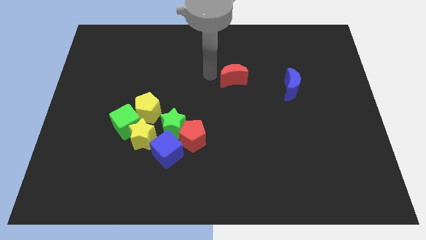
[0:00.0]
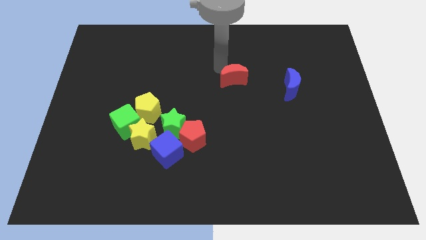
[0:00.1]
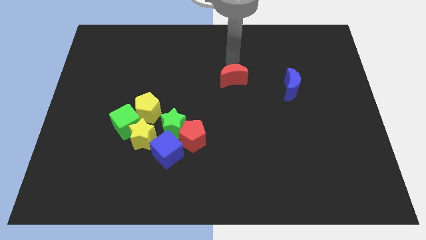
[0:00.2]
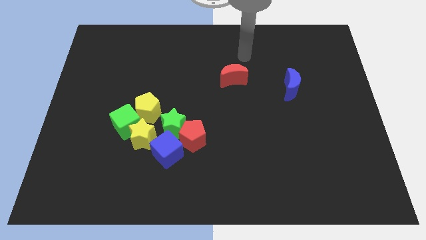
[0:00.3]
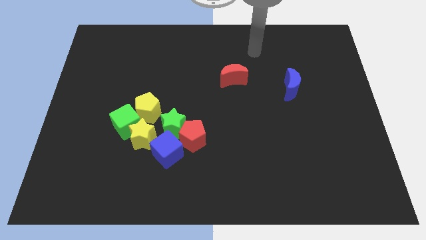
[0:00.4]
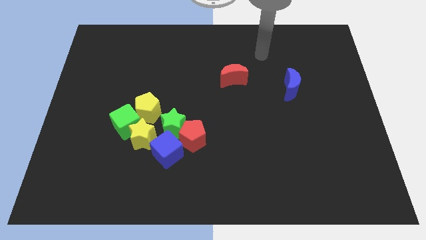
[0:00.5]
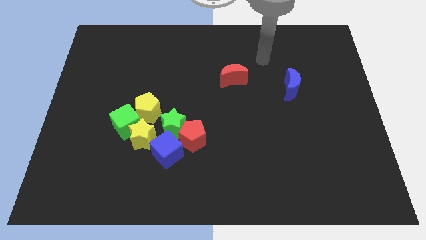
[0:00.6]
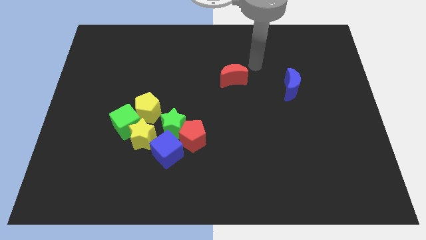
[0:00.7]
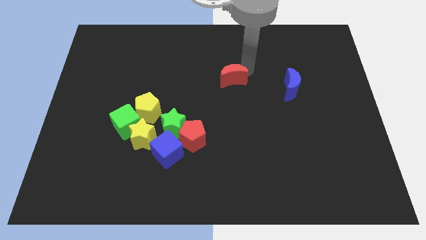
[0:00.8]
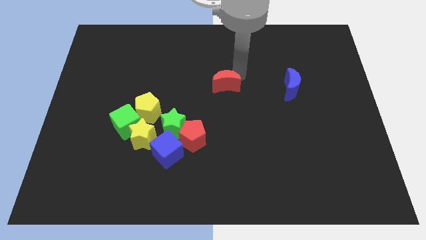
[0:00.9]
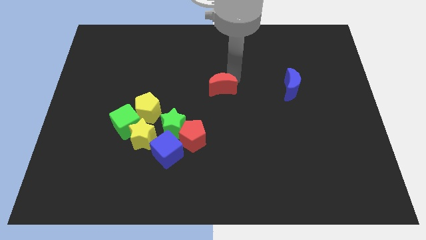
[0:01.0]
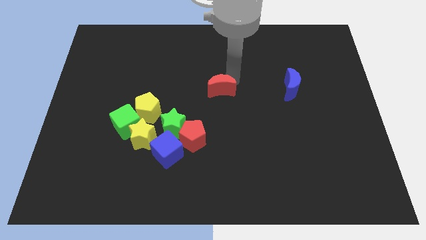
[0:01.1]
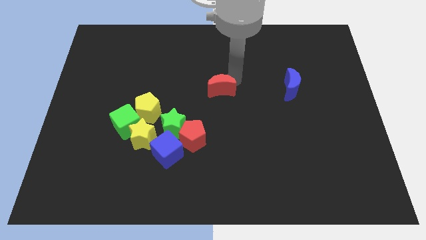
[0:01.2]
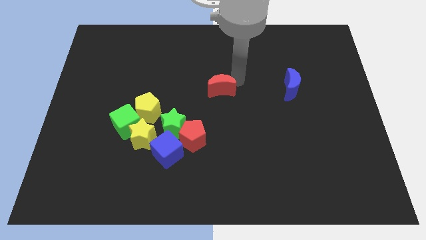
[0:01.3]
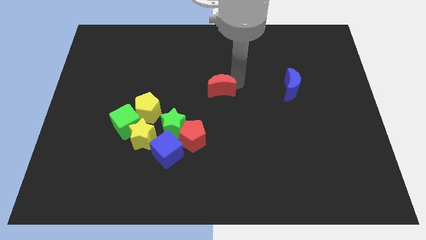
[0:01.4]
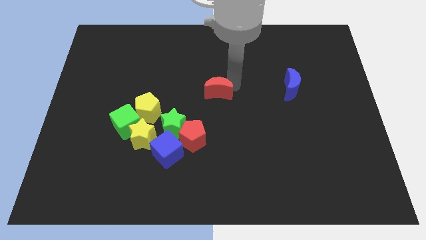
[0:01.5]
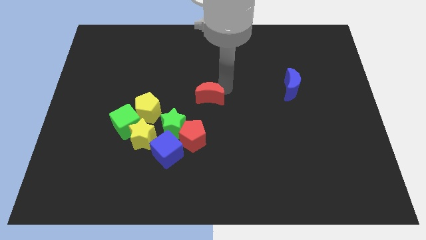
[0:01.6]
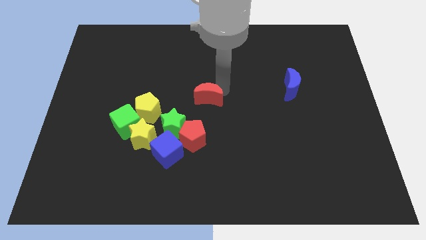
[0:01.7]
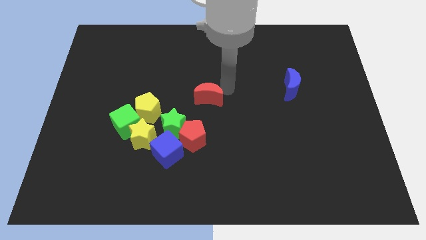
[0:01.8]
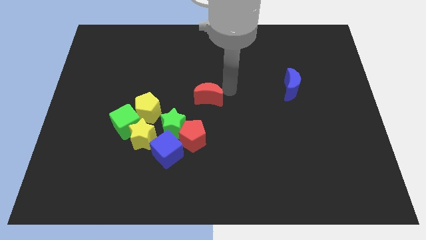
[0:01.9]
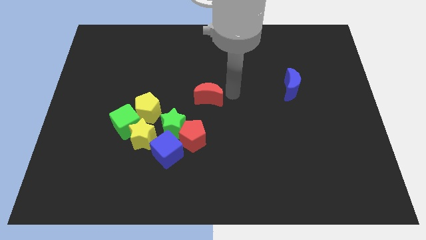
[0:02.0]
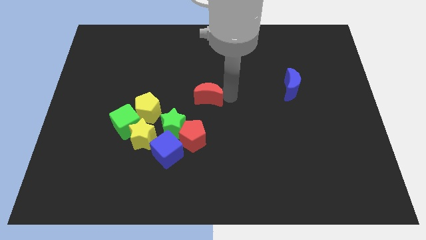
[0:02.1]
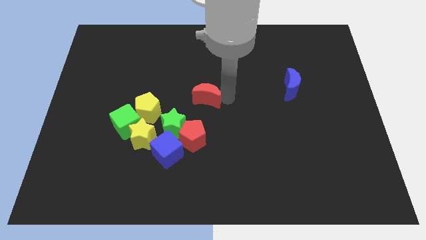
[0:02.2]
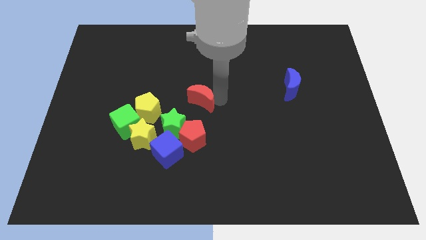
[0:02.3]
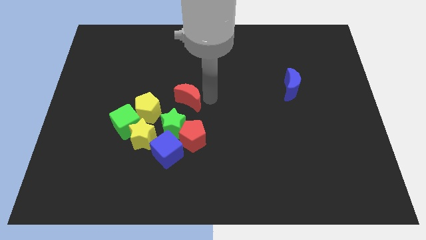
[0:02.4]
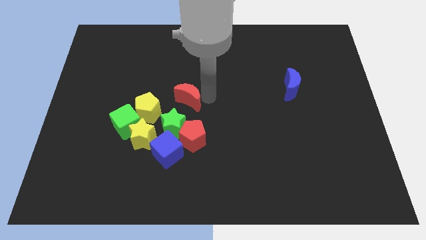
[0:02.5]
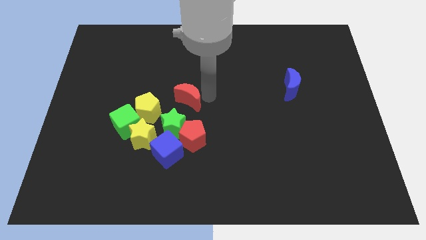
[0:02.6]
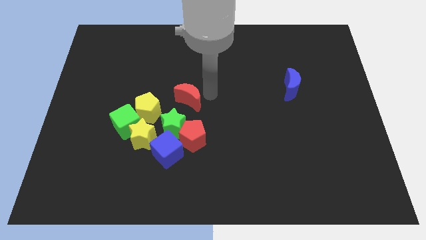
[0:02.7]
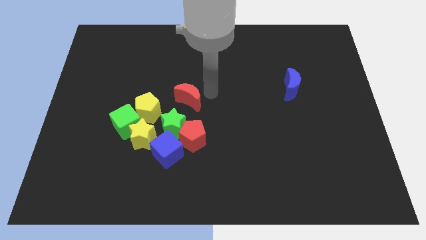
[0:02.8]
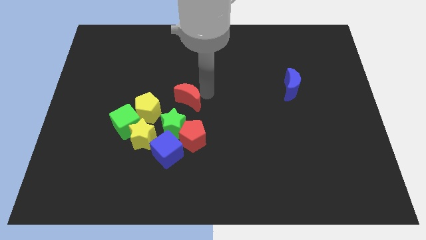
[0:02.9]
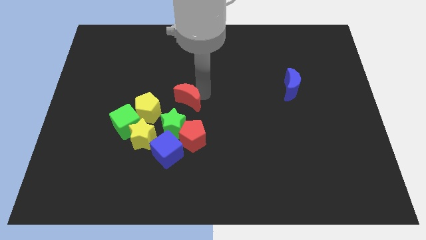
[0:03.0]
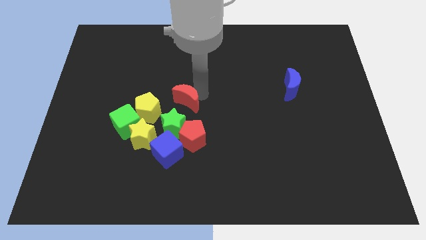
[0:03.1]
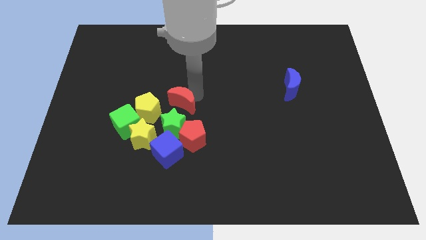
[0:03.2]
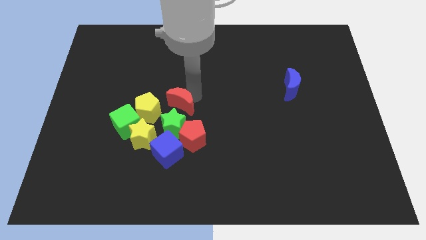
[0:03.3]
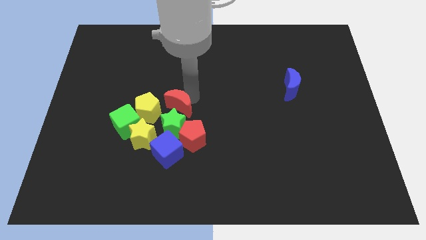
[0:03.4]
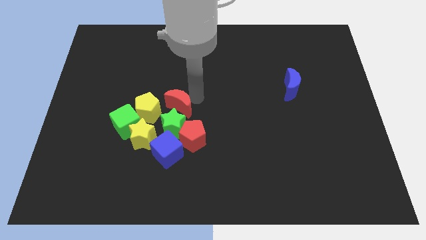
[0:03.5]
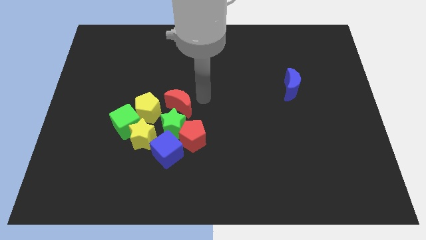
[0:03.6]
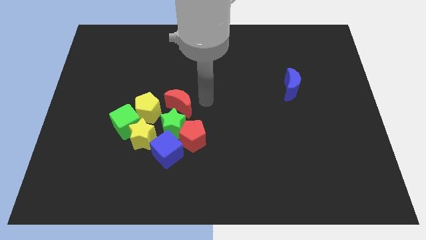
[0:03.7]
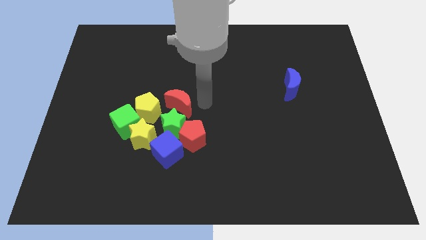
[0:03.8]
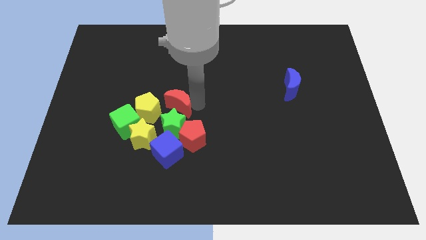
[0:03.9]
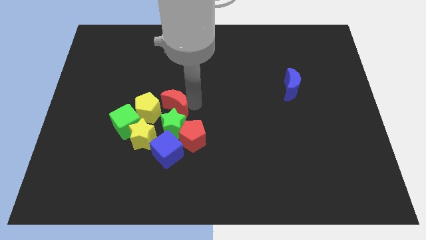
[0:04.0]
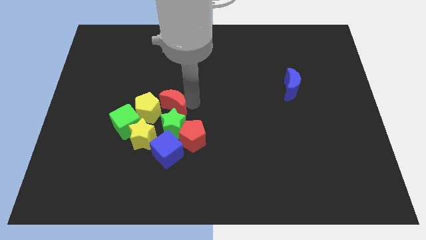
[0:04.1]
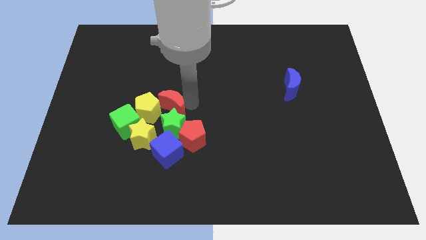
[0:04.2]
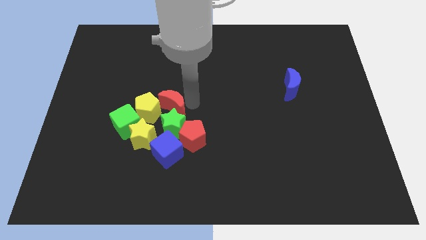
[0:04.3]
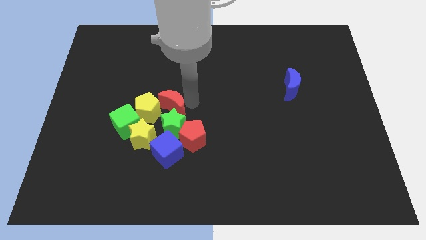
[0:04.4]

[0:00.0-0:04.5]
move the red crescent near to the right side of the yellow pentagon

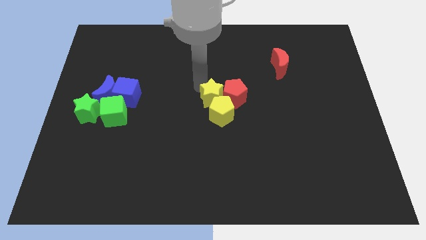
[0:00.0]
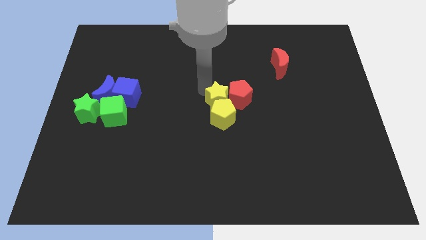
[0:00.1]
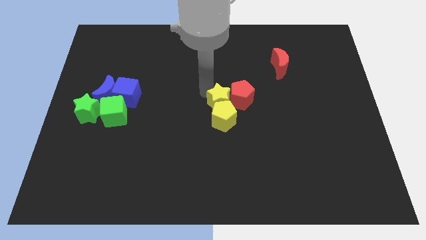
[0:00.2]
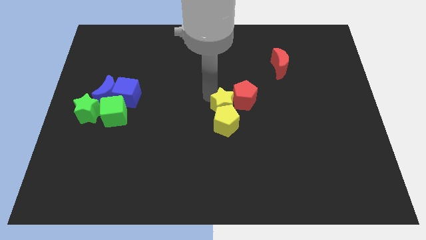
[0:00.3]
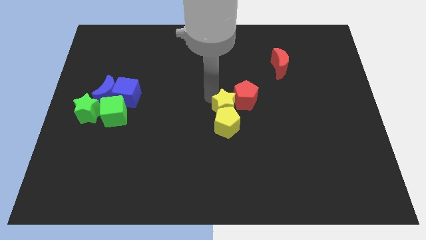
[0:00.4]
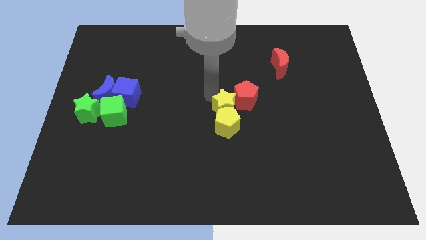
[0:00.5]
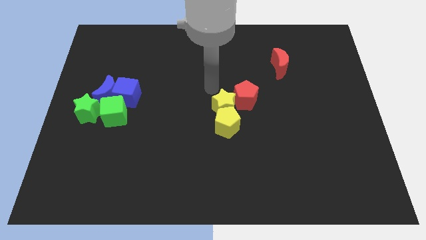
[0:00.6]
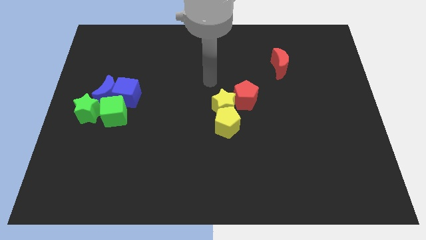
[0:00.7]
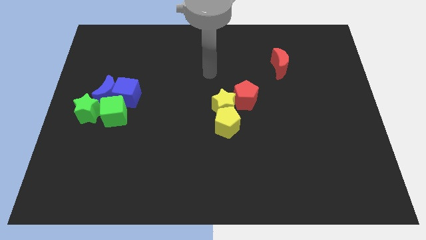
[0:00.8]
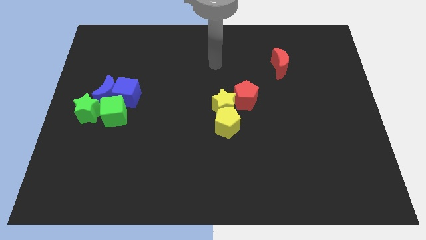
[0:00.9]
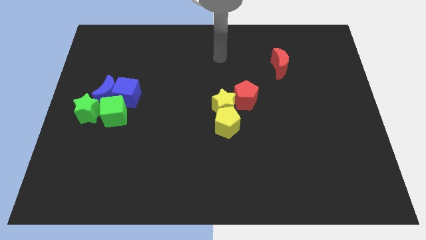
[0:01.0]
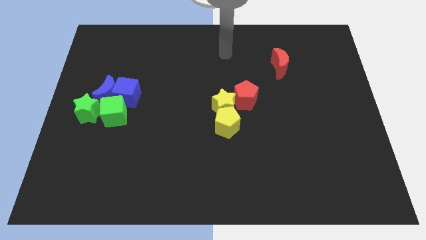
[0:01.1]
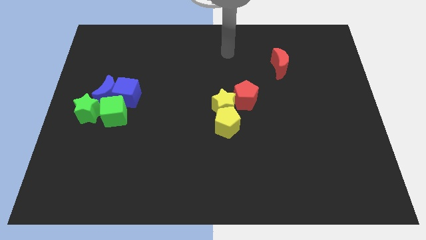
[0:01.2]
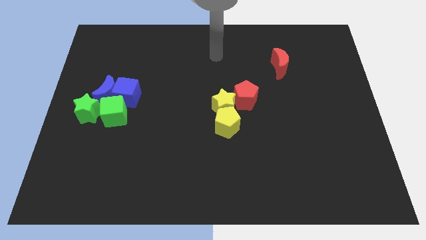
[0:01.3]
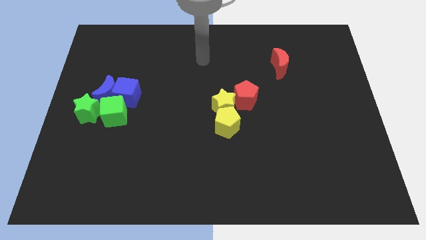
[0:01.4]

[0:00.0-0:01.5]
push yellow star into yellow pentagon

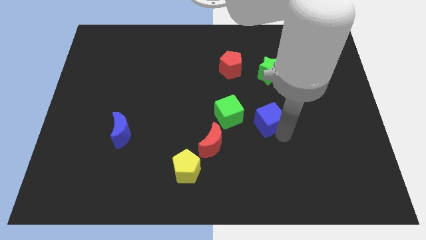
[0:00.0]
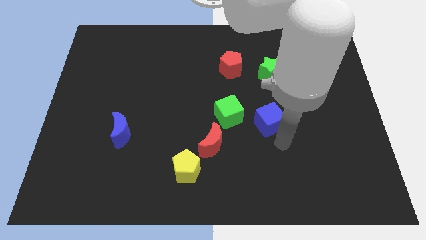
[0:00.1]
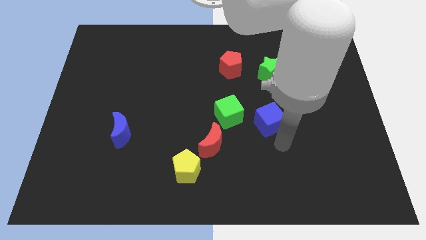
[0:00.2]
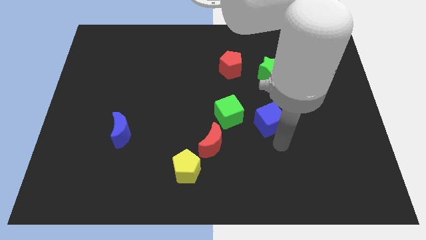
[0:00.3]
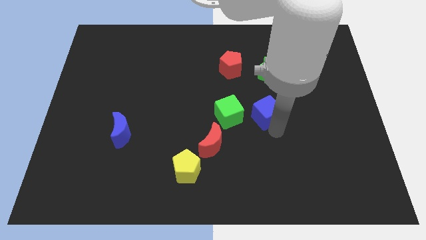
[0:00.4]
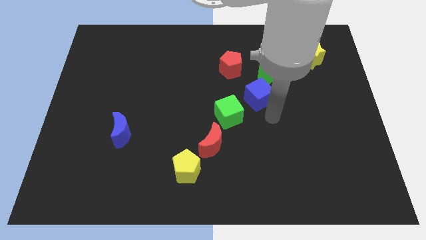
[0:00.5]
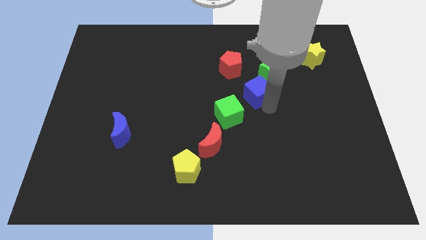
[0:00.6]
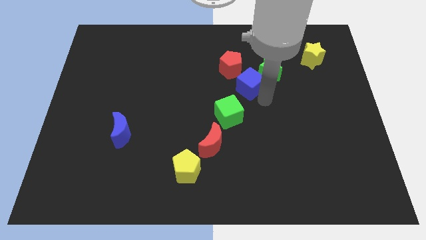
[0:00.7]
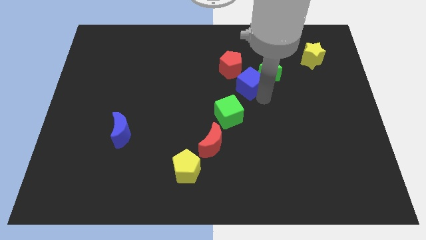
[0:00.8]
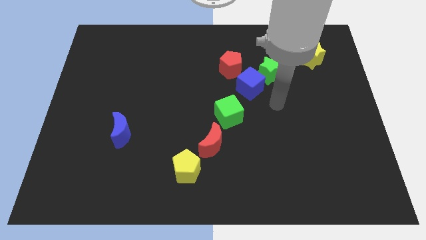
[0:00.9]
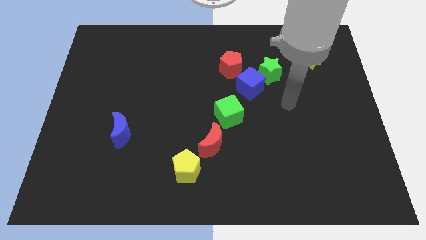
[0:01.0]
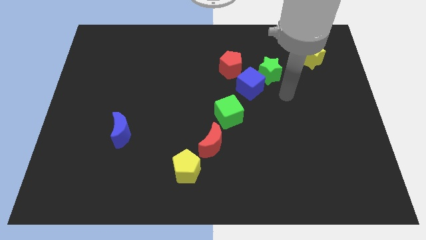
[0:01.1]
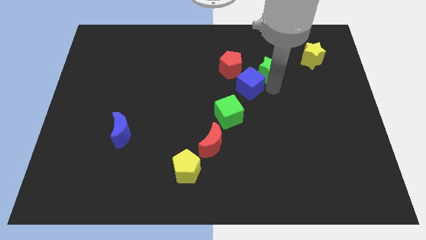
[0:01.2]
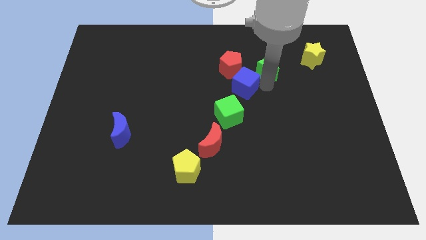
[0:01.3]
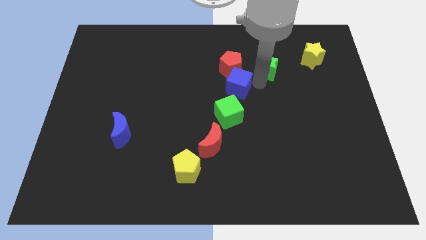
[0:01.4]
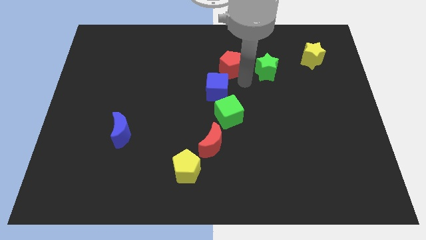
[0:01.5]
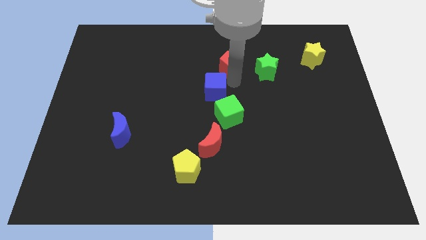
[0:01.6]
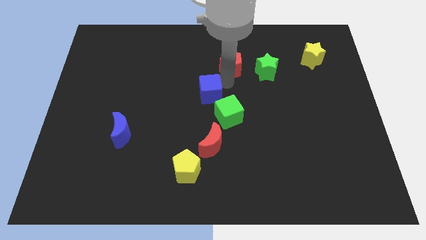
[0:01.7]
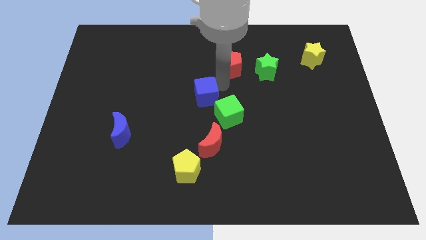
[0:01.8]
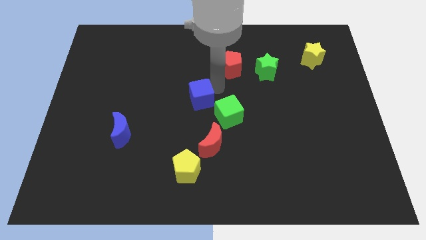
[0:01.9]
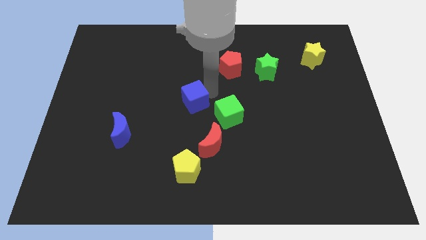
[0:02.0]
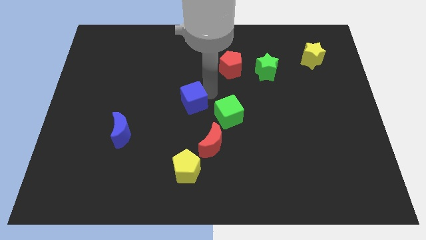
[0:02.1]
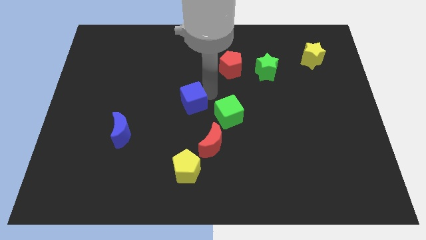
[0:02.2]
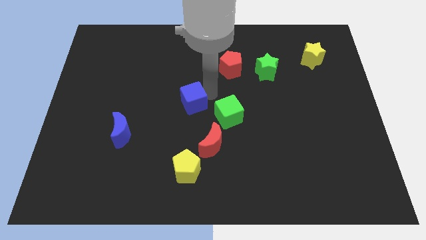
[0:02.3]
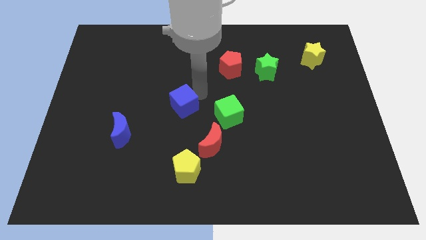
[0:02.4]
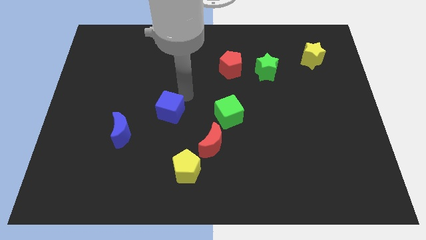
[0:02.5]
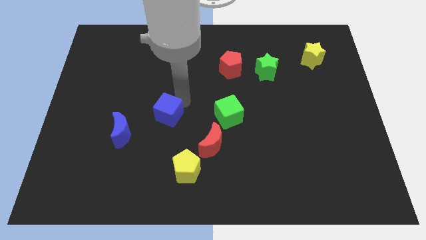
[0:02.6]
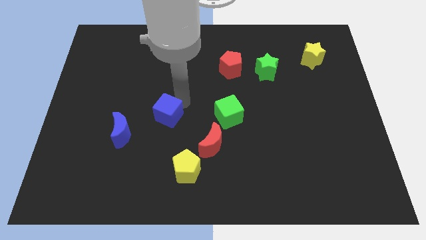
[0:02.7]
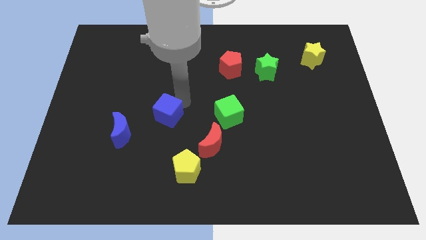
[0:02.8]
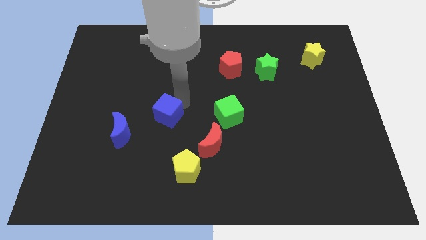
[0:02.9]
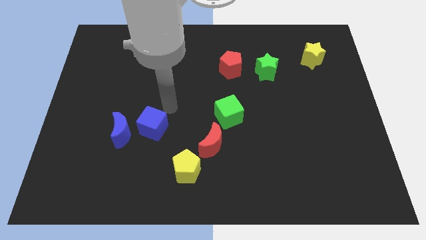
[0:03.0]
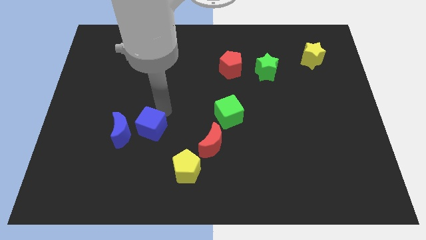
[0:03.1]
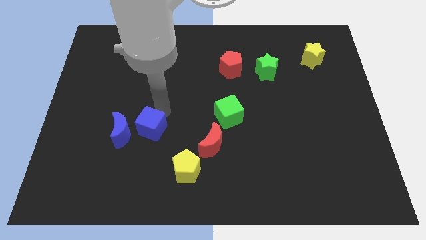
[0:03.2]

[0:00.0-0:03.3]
place the blue cube to the left of the green cube
